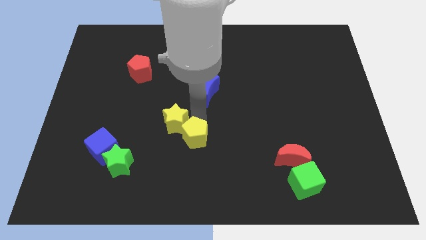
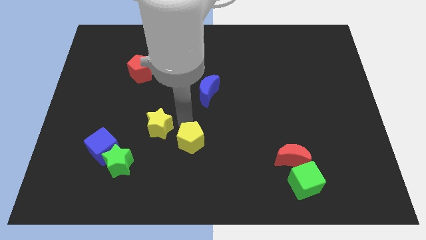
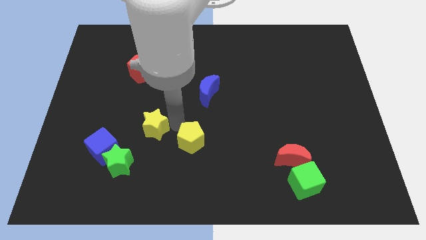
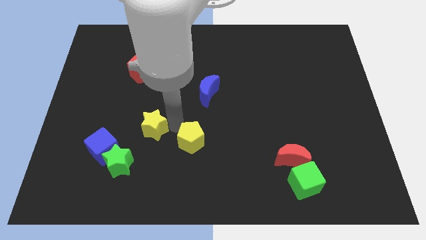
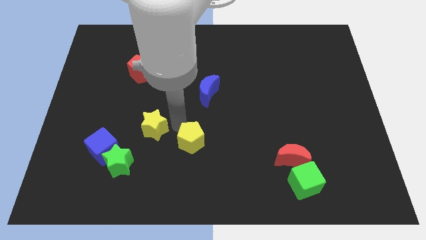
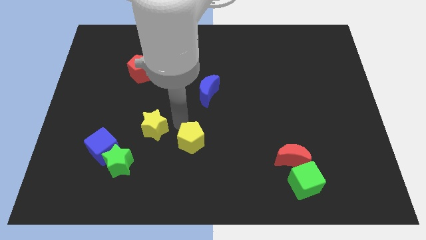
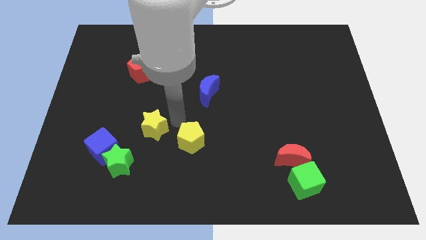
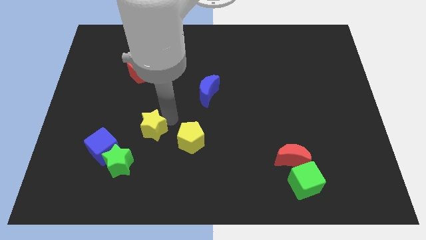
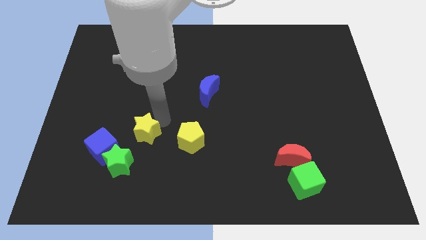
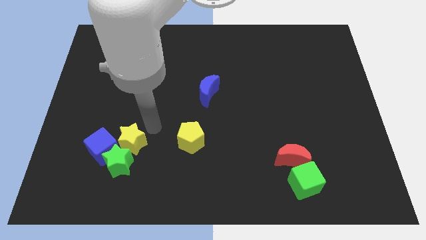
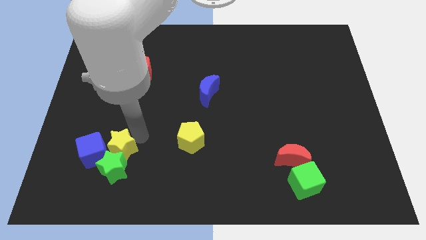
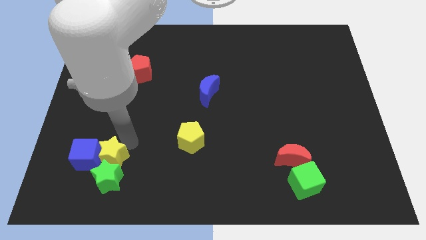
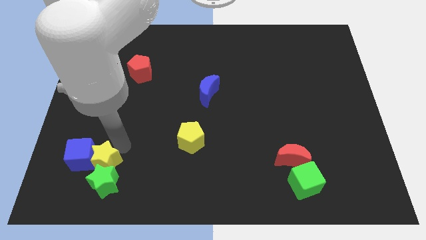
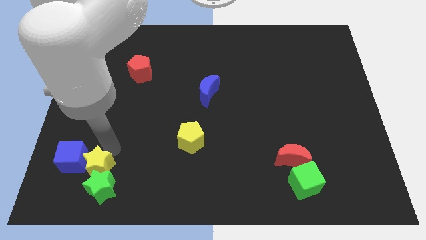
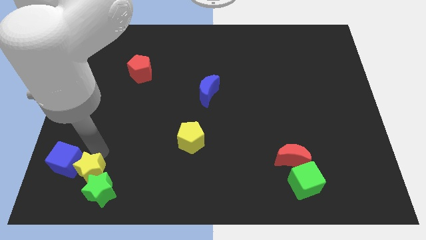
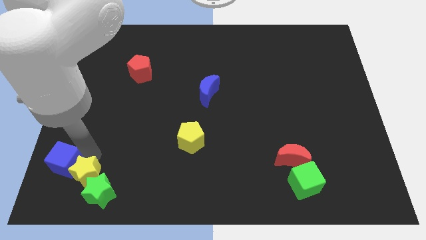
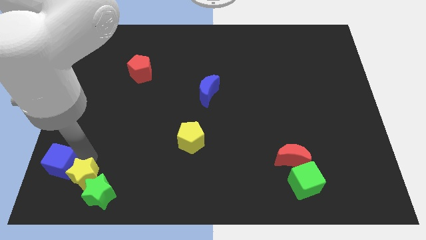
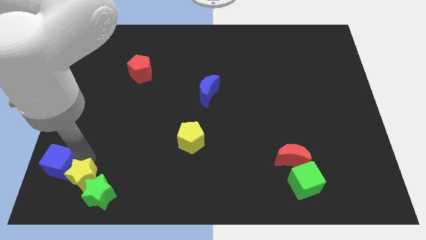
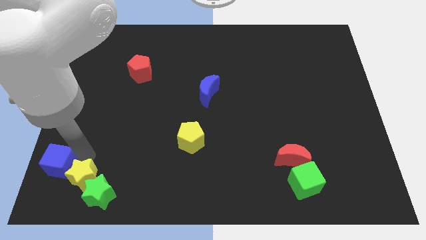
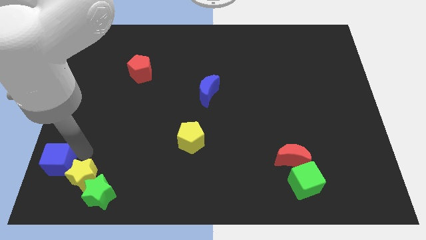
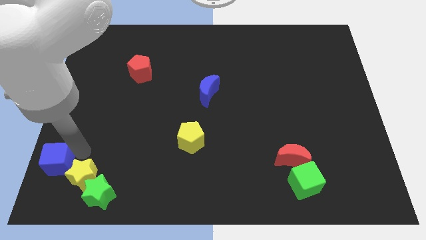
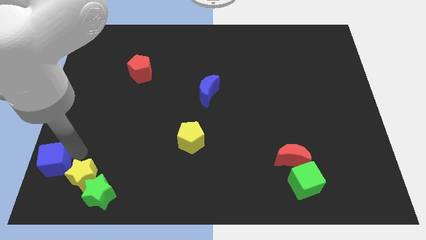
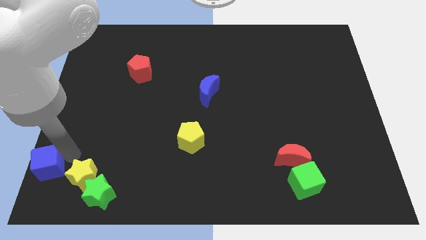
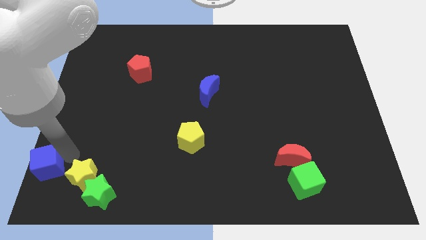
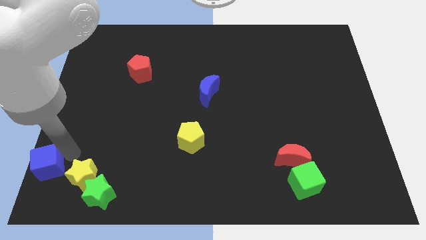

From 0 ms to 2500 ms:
move the yellow star into the green star to the bottom left

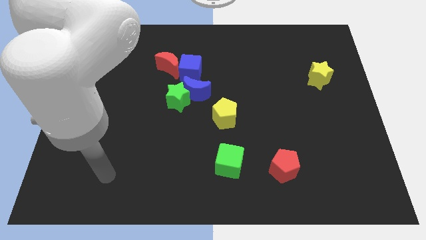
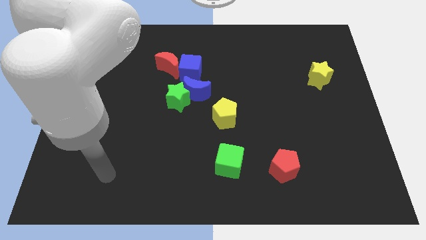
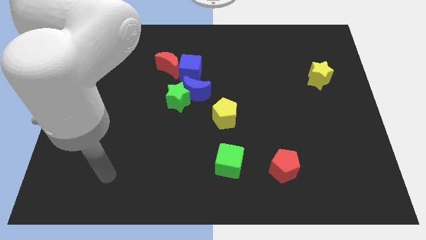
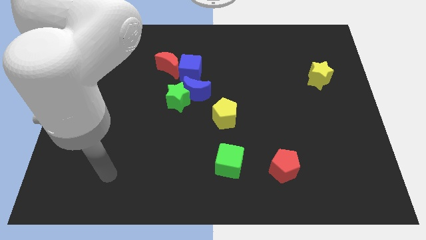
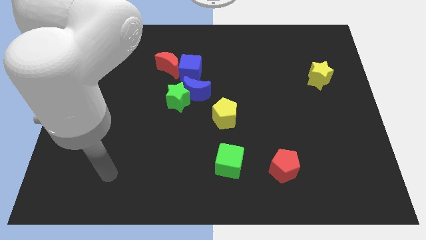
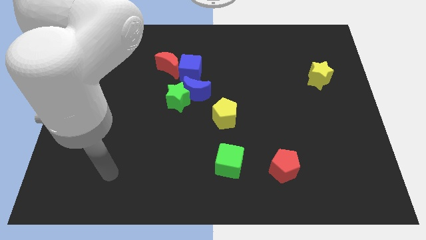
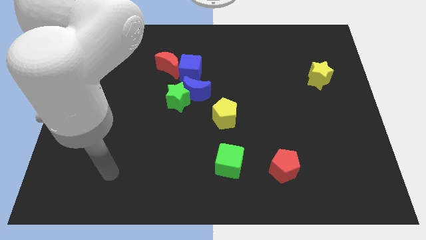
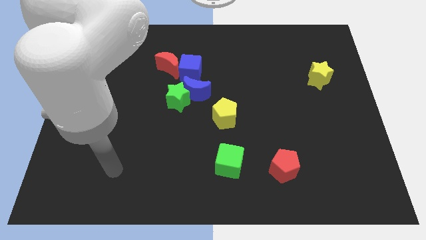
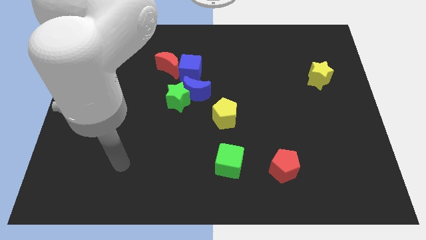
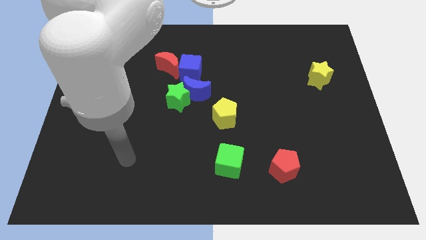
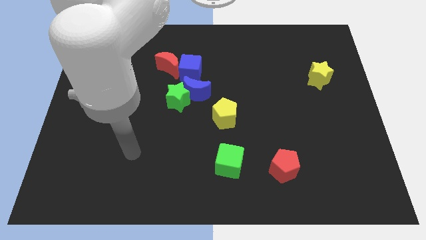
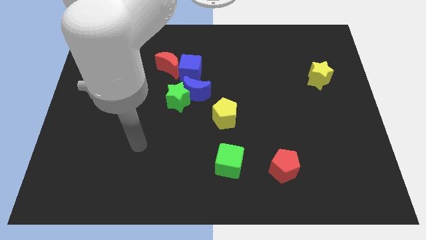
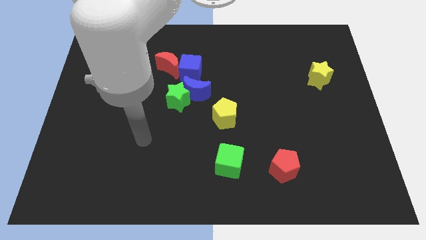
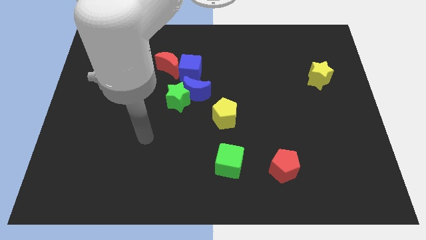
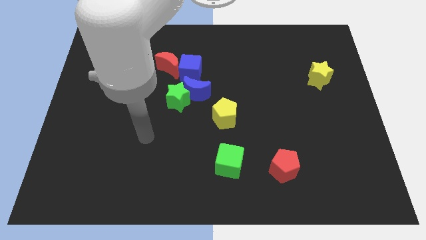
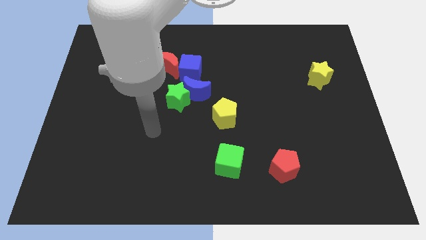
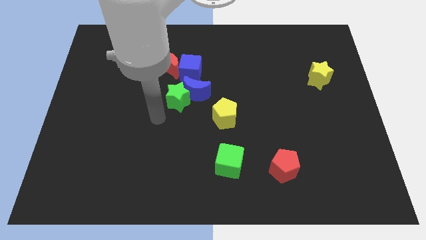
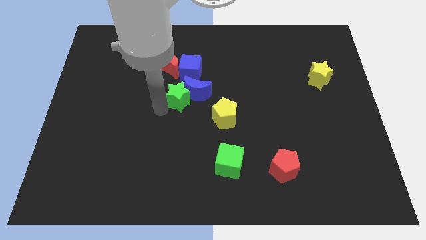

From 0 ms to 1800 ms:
point the arm to the bottom left of the green star

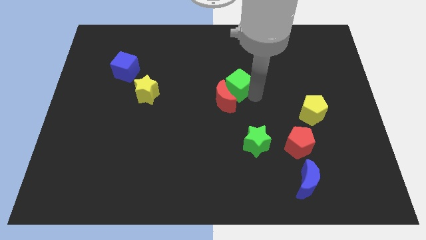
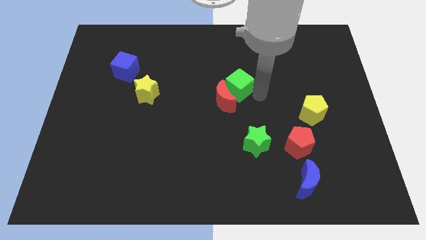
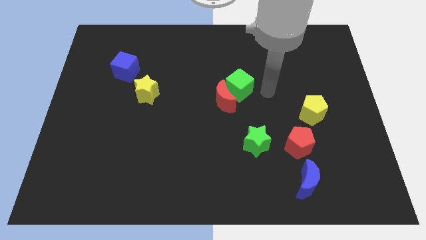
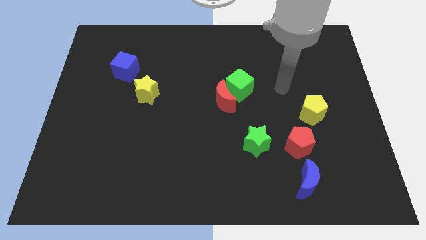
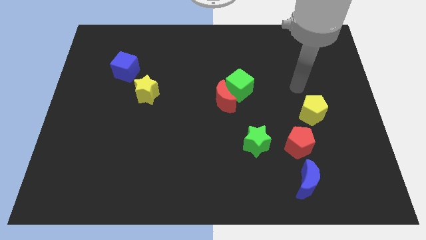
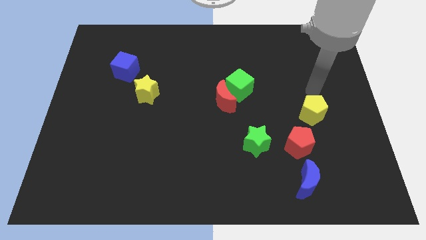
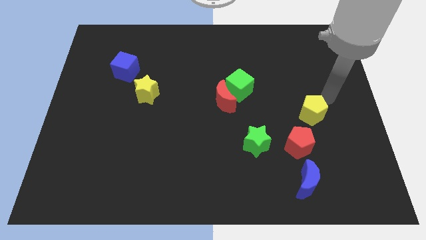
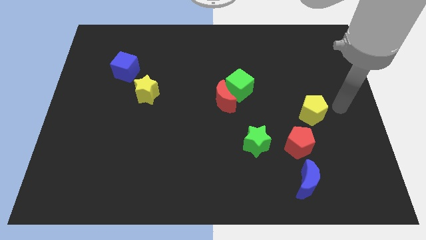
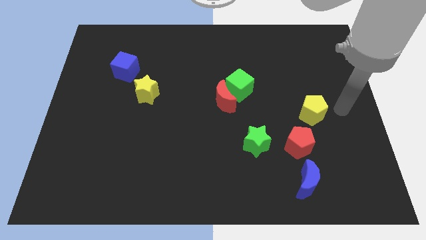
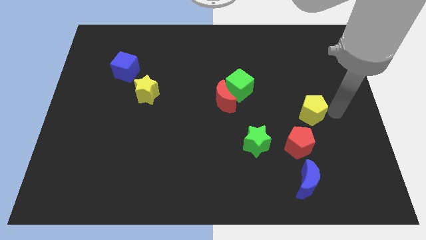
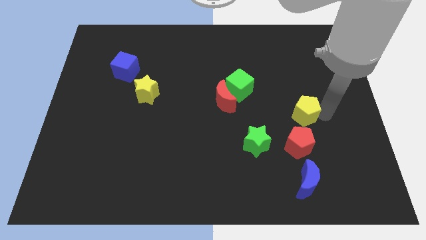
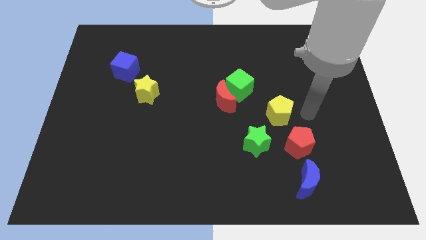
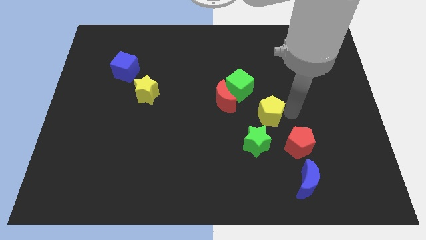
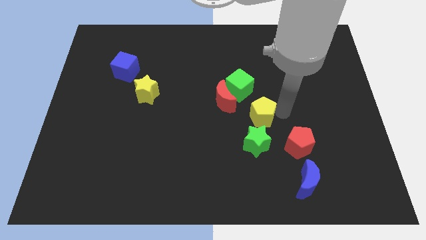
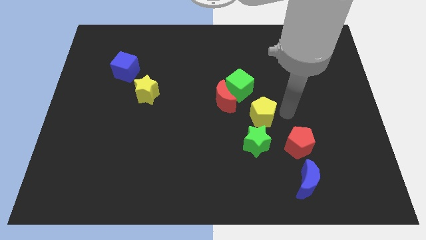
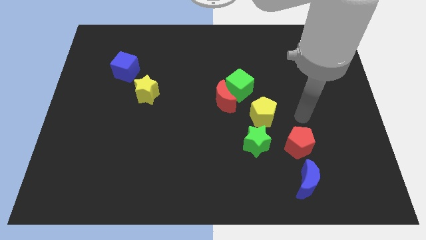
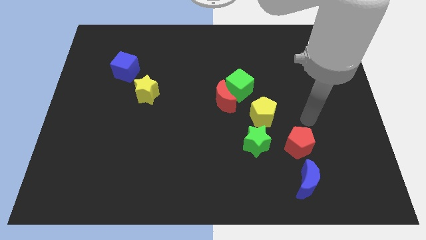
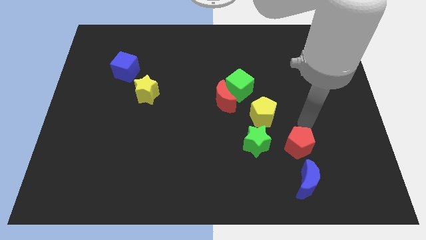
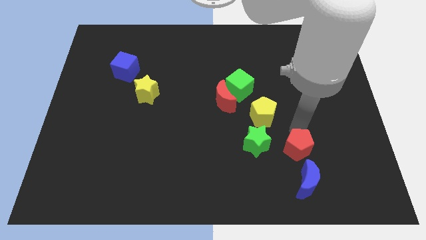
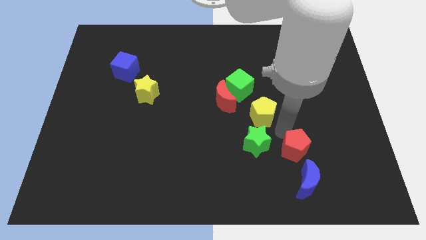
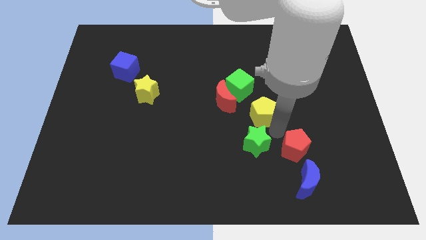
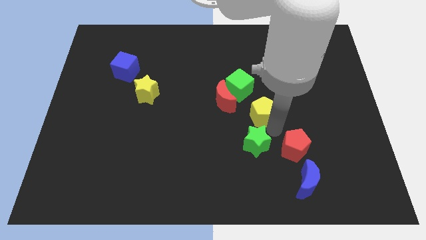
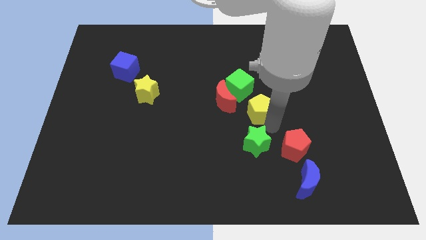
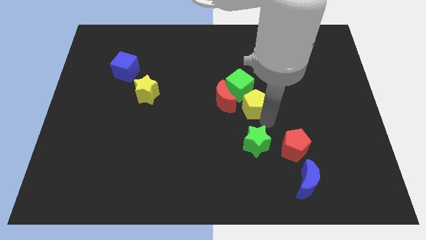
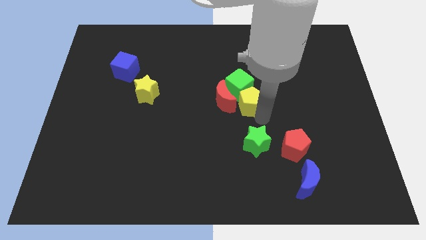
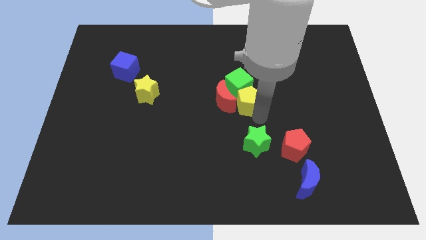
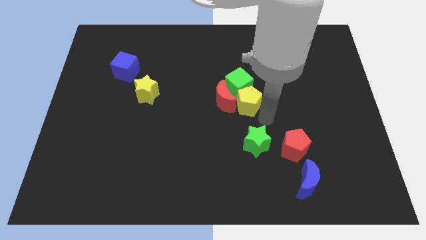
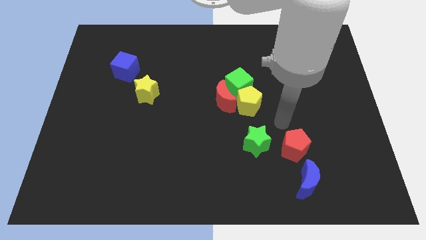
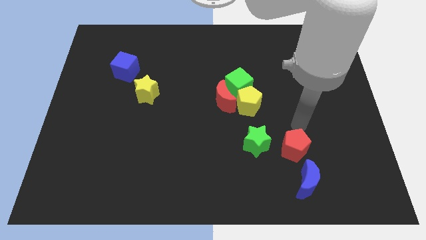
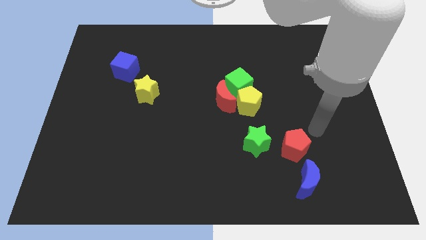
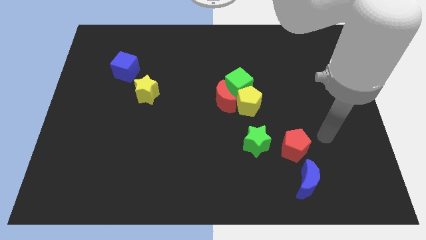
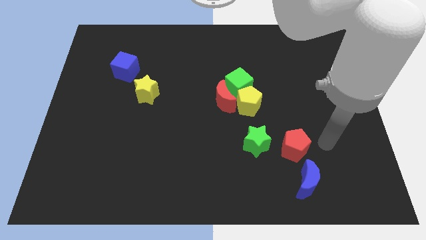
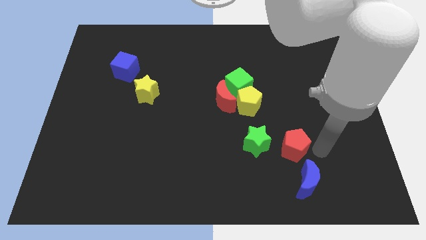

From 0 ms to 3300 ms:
push the yellow pentagon to the bottom of the green cube

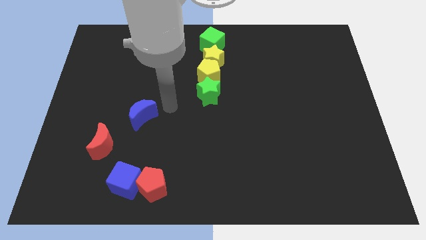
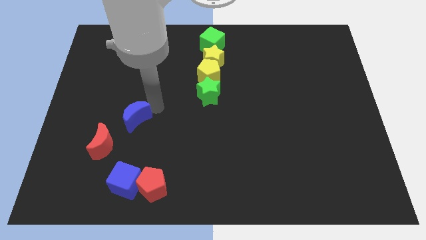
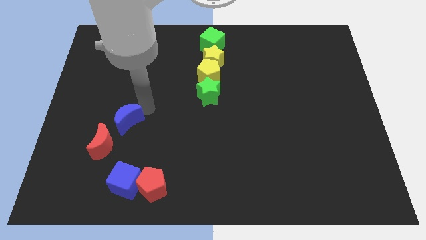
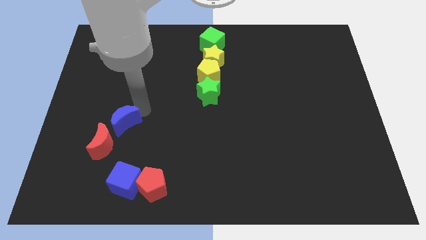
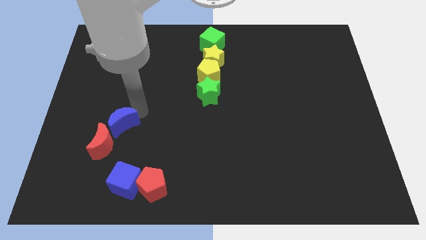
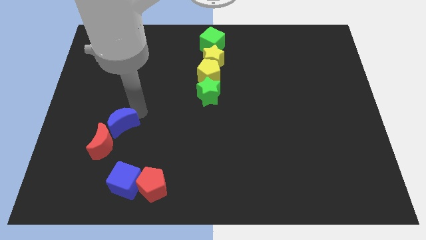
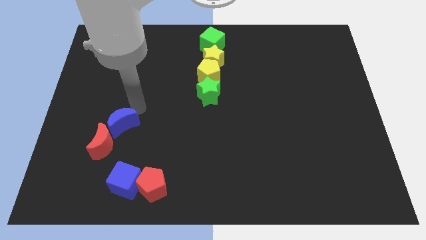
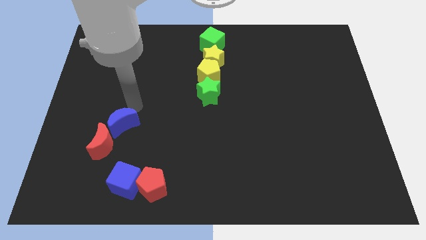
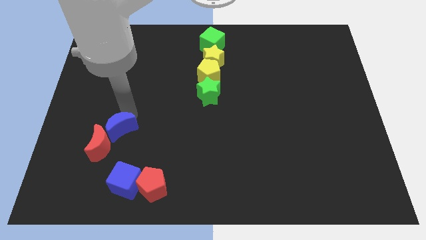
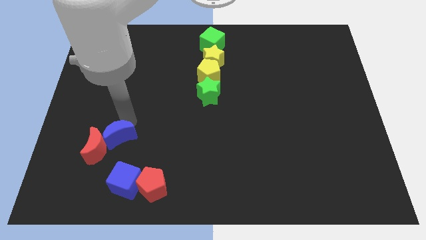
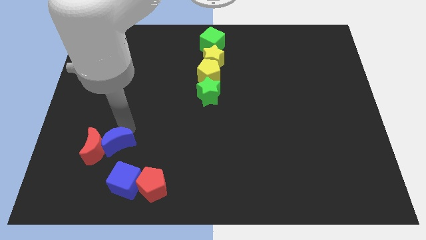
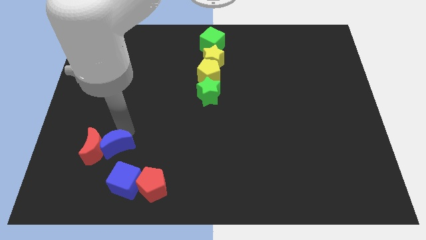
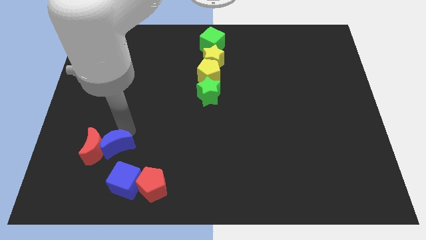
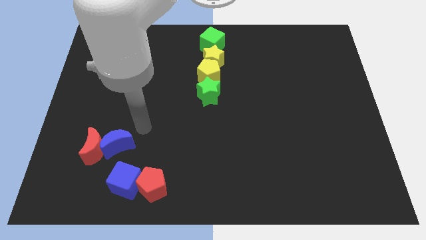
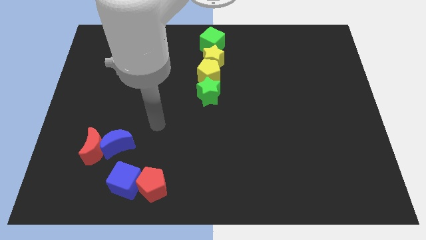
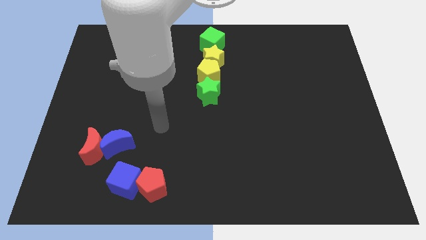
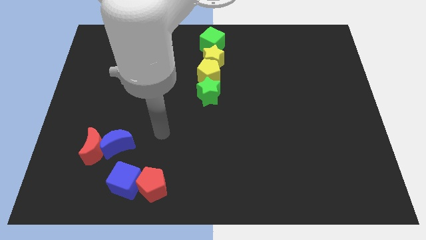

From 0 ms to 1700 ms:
push the blue moon into the red moon
